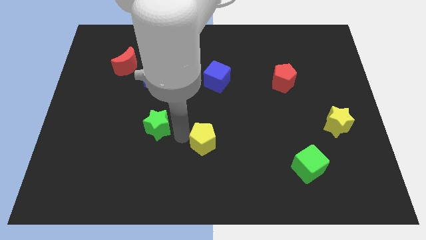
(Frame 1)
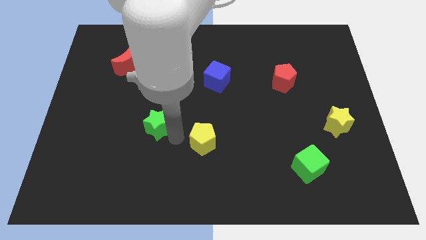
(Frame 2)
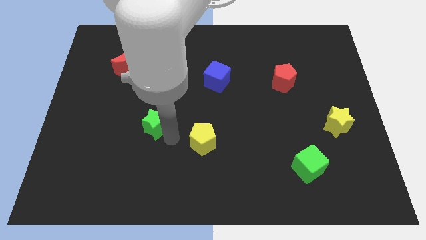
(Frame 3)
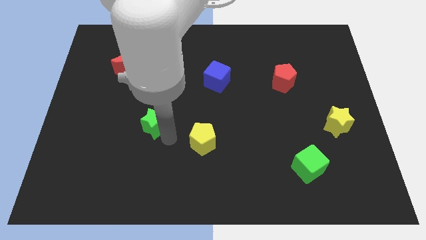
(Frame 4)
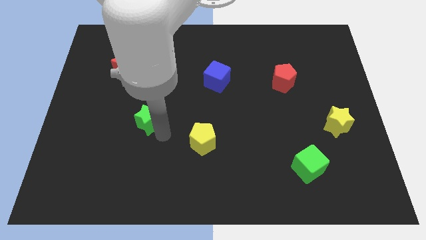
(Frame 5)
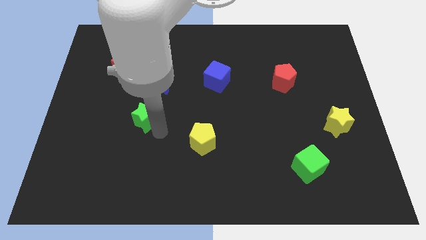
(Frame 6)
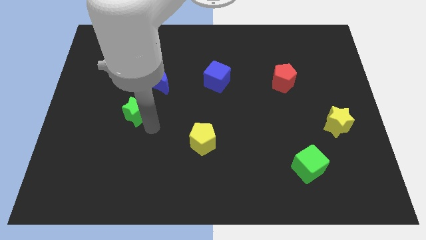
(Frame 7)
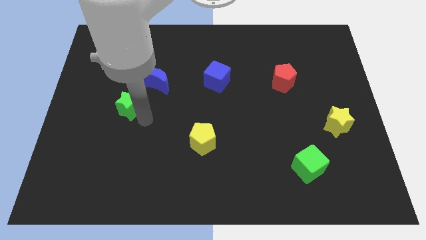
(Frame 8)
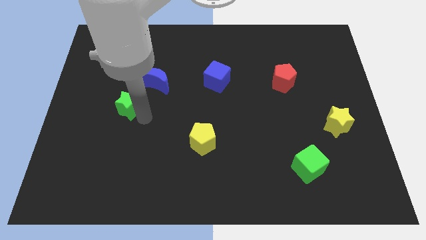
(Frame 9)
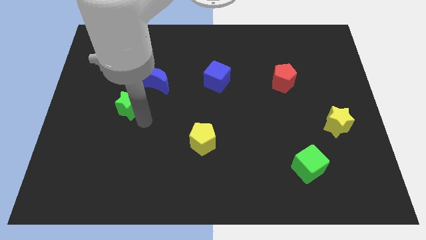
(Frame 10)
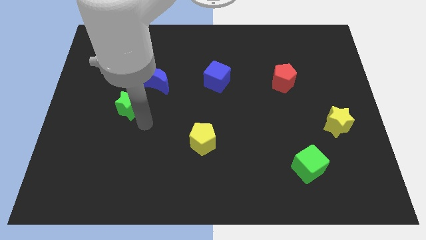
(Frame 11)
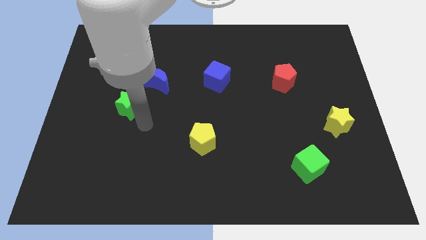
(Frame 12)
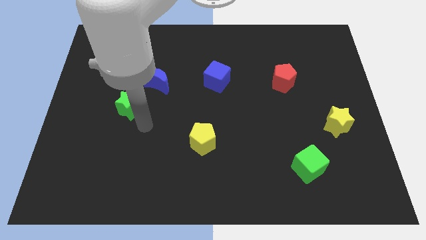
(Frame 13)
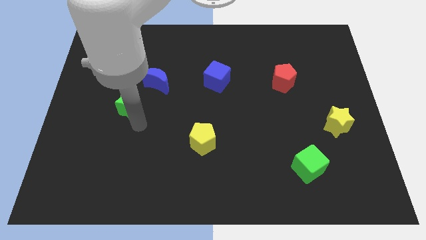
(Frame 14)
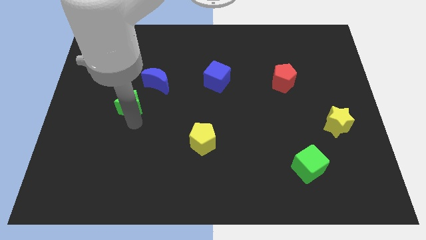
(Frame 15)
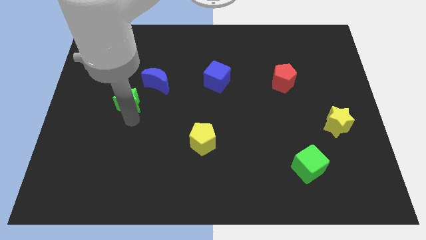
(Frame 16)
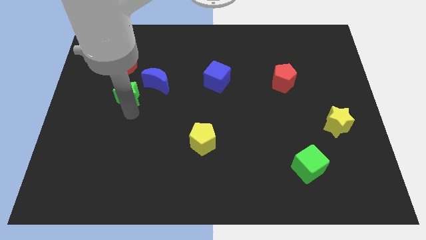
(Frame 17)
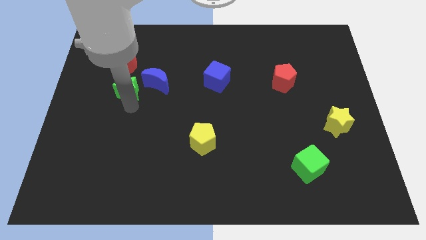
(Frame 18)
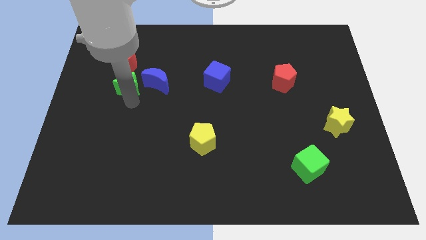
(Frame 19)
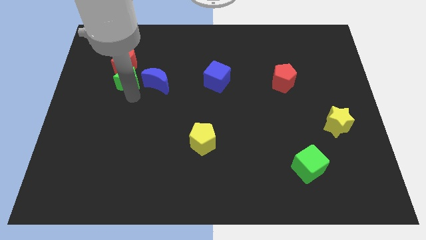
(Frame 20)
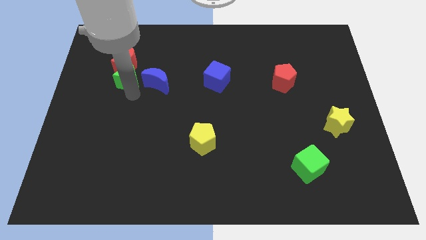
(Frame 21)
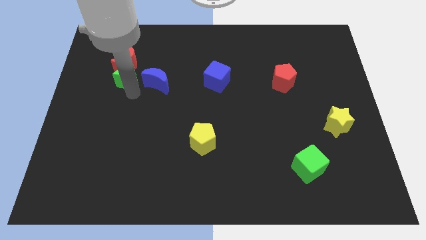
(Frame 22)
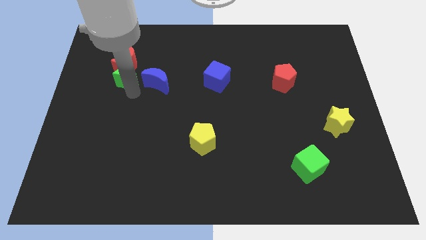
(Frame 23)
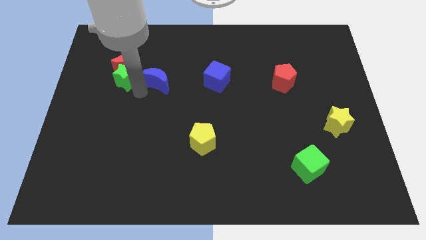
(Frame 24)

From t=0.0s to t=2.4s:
push the green star to the bottom of the red crescent

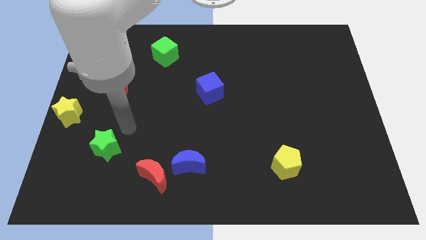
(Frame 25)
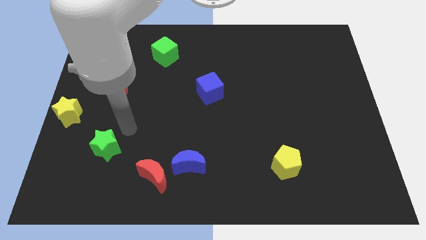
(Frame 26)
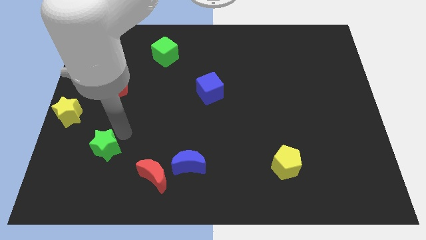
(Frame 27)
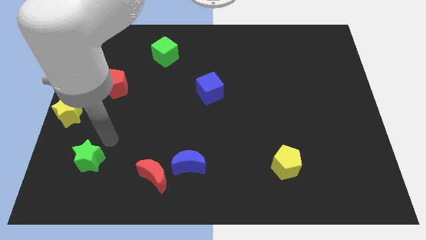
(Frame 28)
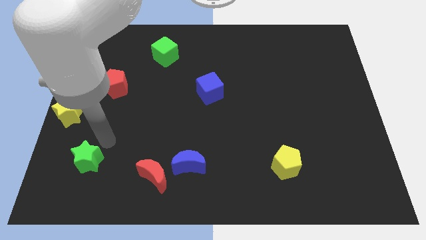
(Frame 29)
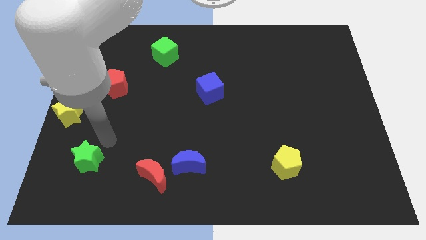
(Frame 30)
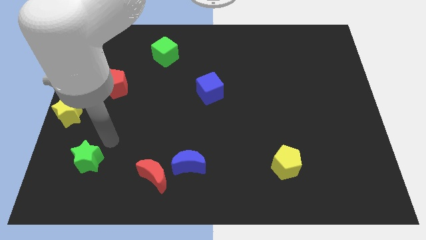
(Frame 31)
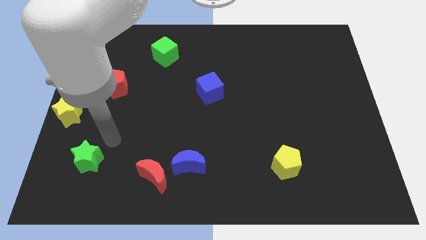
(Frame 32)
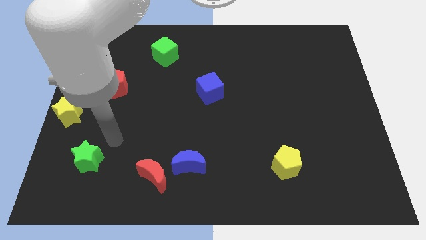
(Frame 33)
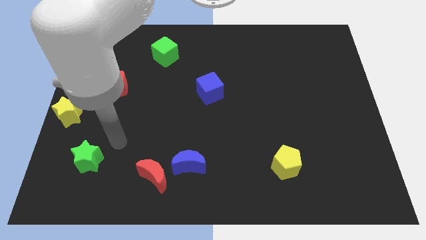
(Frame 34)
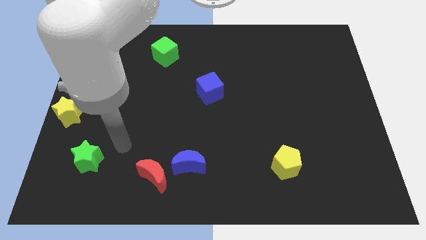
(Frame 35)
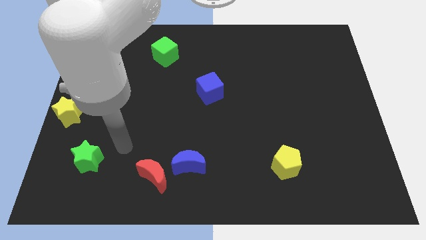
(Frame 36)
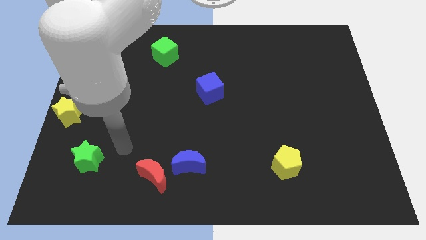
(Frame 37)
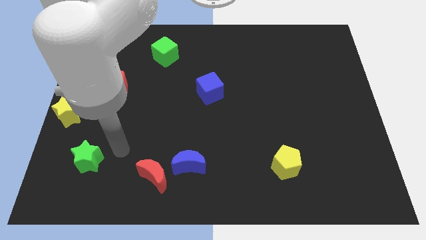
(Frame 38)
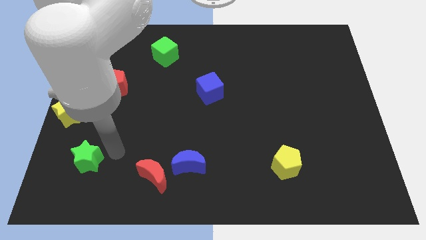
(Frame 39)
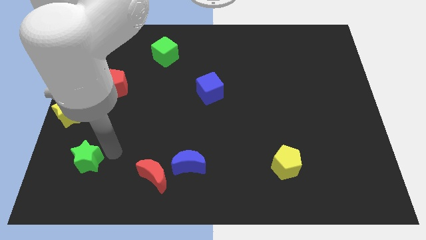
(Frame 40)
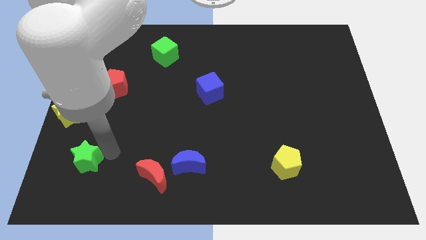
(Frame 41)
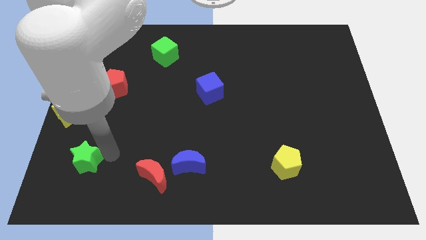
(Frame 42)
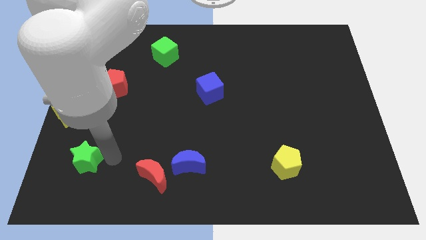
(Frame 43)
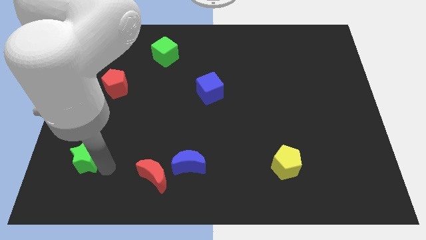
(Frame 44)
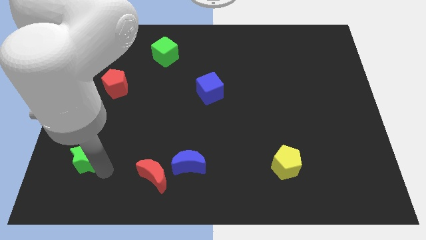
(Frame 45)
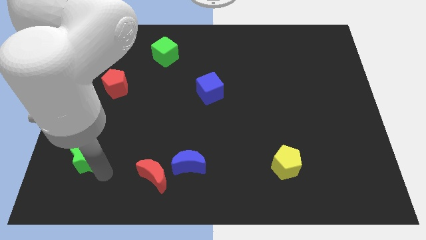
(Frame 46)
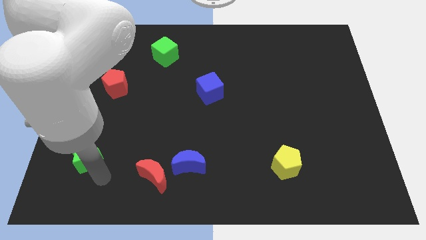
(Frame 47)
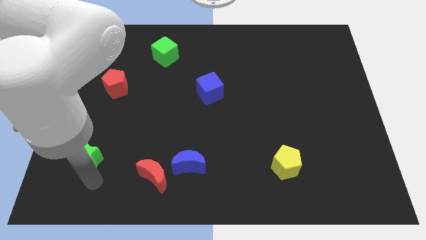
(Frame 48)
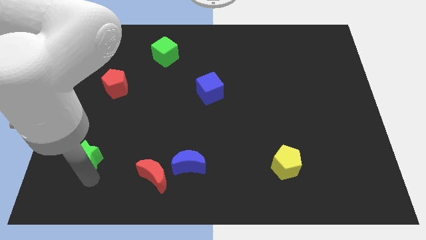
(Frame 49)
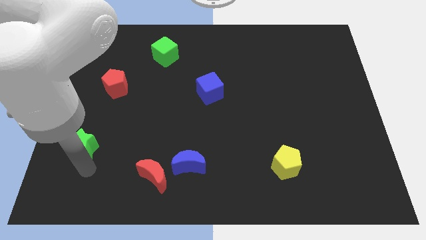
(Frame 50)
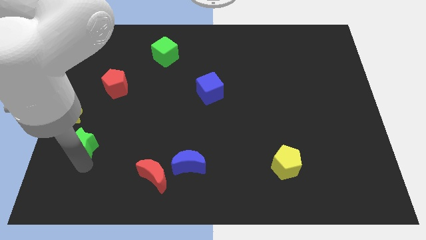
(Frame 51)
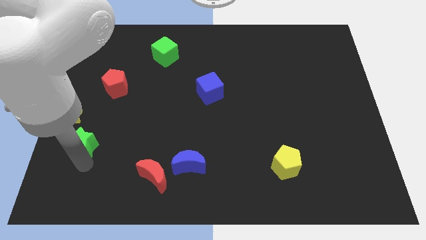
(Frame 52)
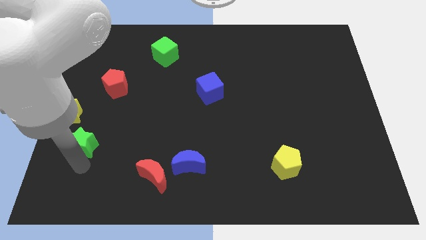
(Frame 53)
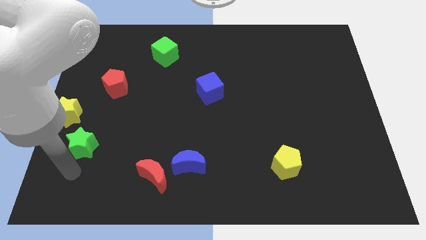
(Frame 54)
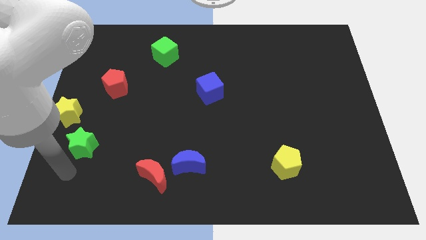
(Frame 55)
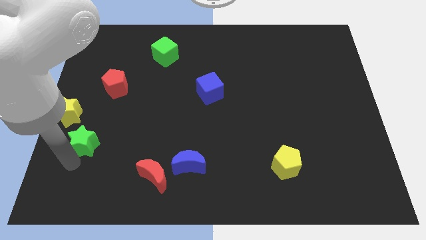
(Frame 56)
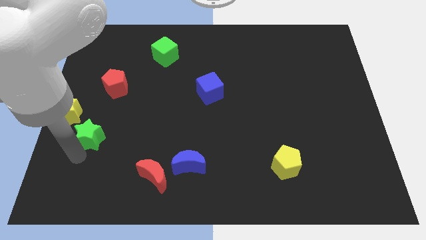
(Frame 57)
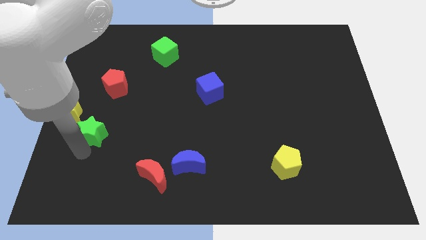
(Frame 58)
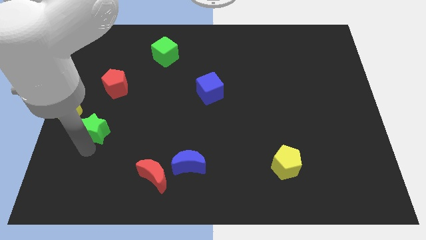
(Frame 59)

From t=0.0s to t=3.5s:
place the green star diagonally top left to red moon

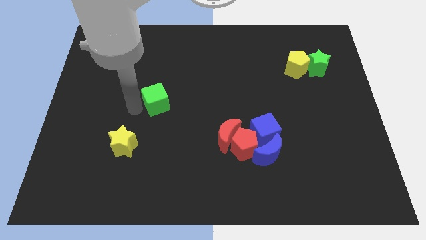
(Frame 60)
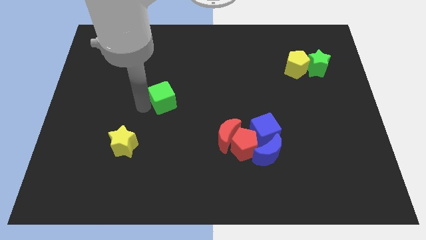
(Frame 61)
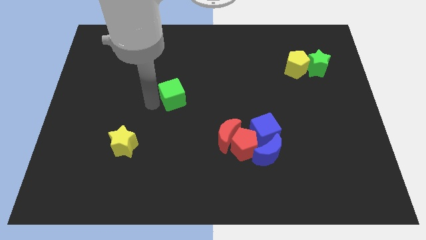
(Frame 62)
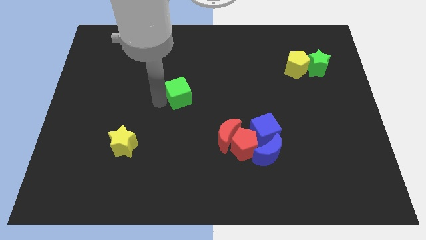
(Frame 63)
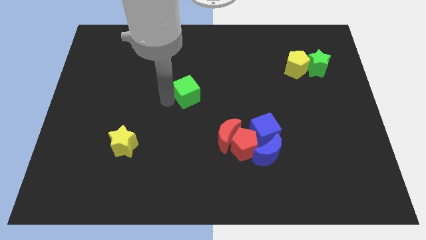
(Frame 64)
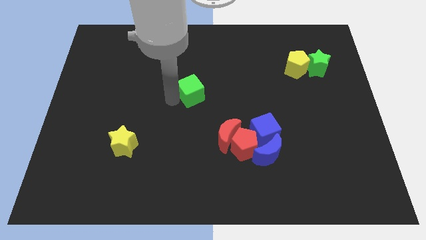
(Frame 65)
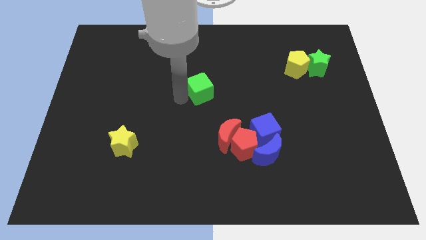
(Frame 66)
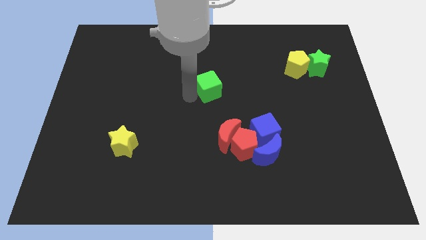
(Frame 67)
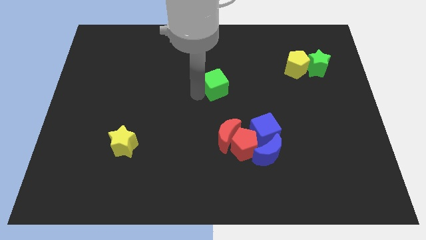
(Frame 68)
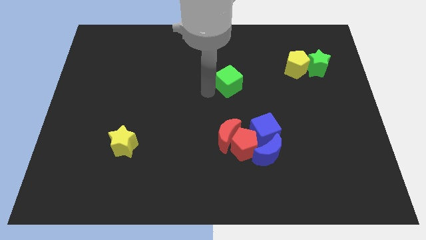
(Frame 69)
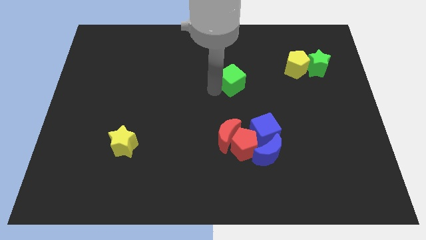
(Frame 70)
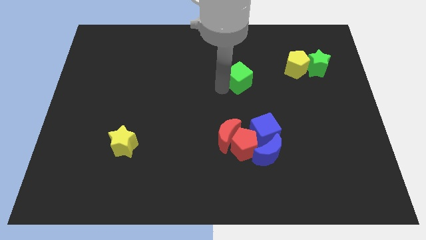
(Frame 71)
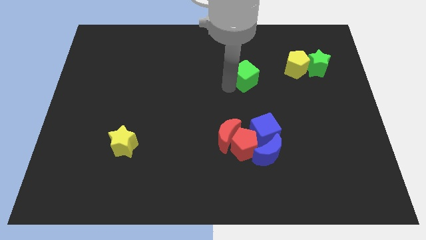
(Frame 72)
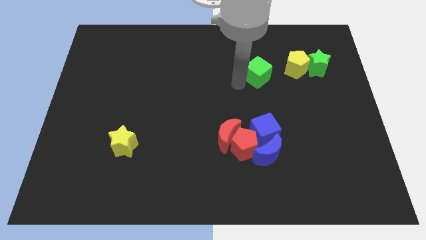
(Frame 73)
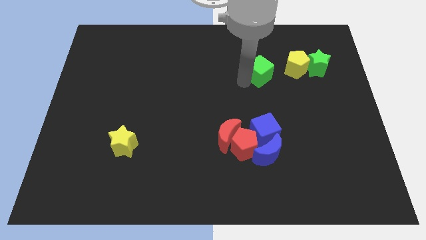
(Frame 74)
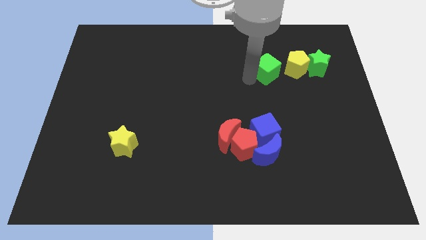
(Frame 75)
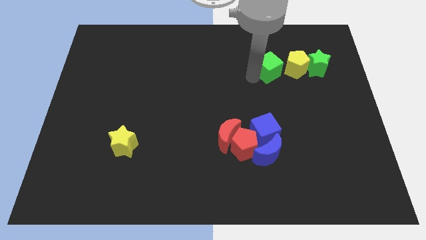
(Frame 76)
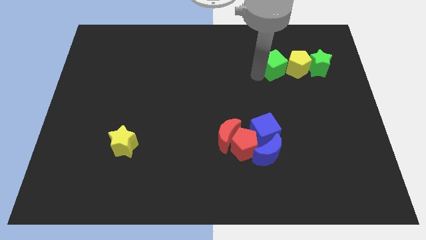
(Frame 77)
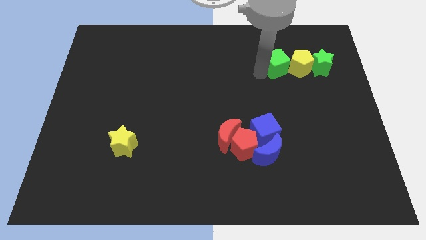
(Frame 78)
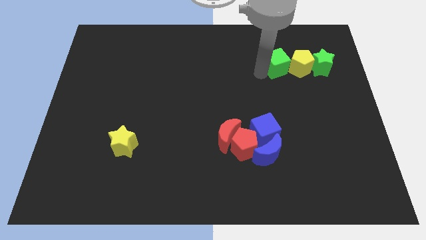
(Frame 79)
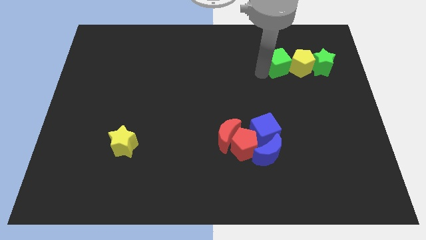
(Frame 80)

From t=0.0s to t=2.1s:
place the green cube into the yellow pentagon to the right

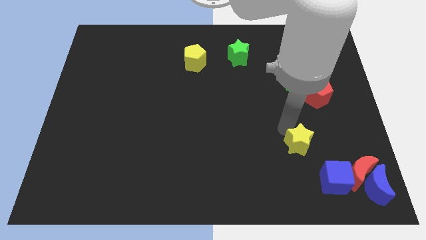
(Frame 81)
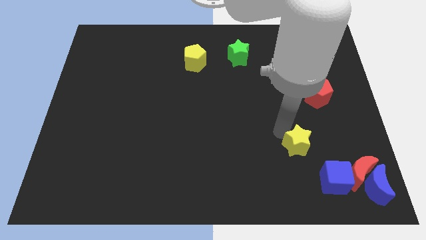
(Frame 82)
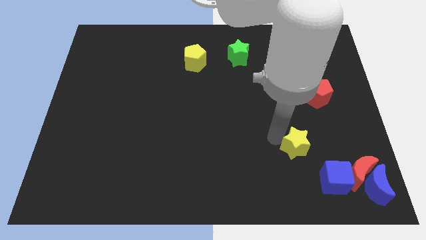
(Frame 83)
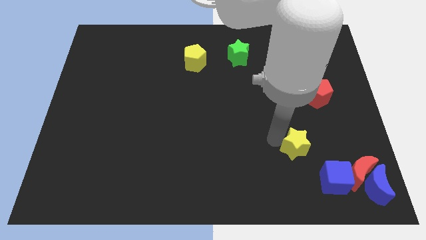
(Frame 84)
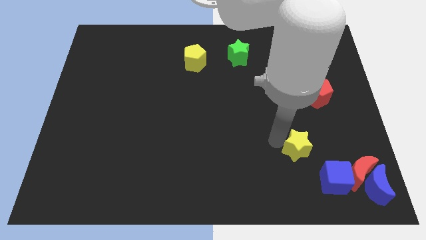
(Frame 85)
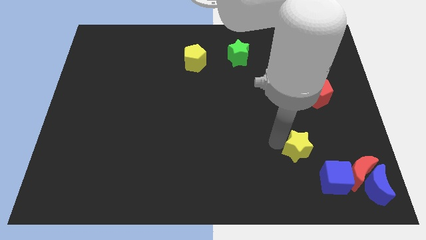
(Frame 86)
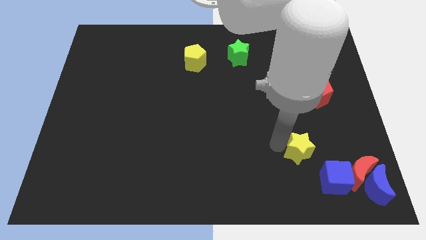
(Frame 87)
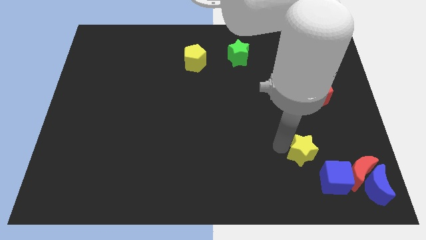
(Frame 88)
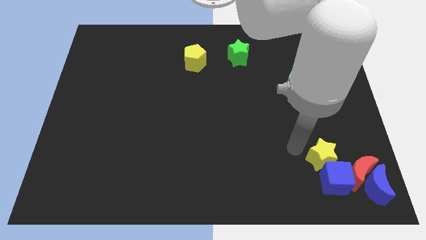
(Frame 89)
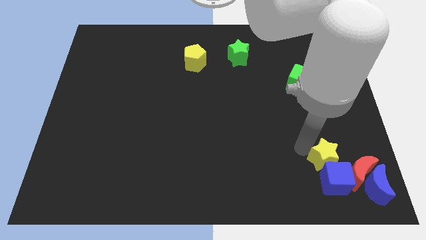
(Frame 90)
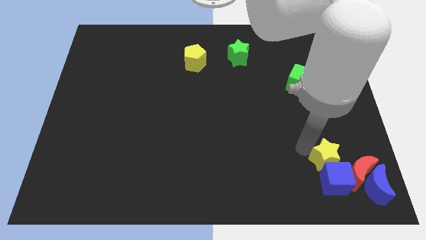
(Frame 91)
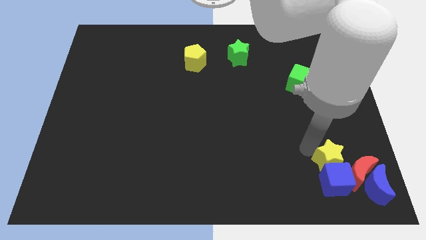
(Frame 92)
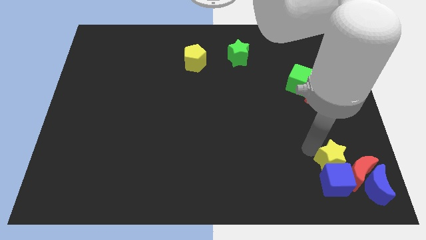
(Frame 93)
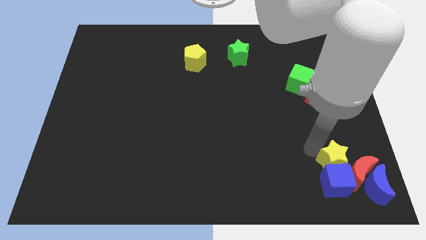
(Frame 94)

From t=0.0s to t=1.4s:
slide the yellow star vertically above the blue cube
